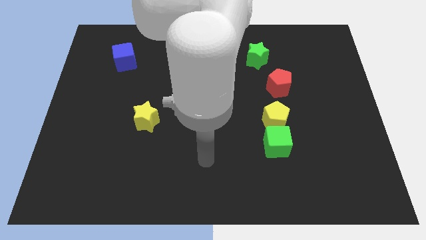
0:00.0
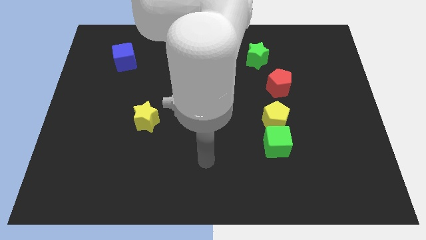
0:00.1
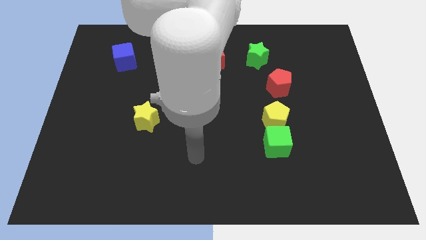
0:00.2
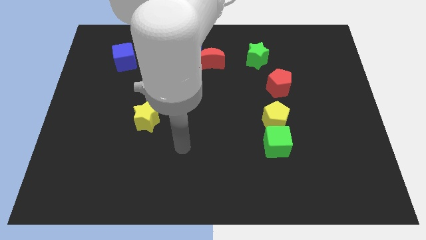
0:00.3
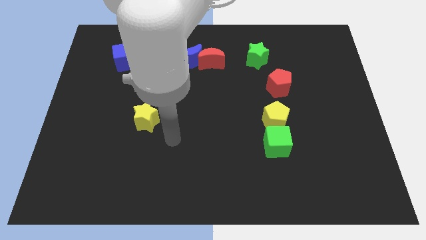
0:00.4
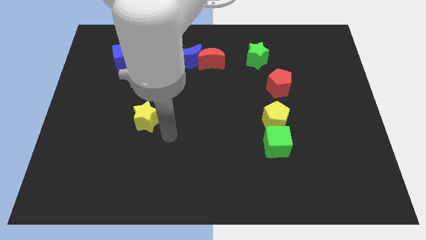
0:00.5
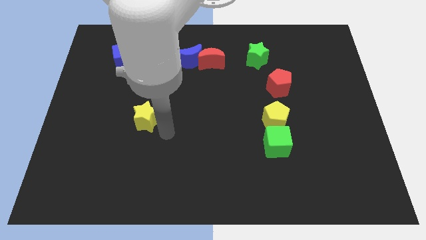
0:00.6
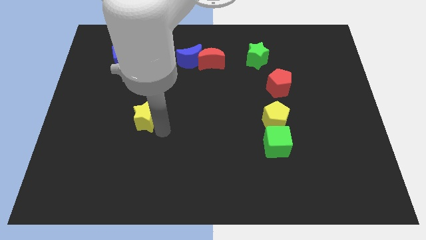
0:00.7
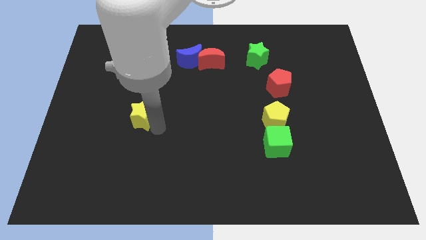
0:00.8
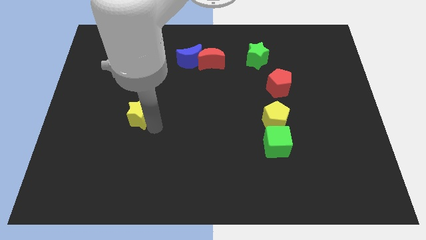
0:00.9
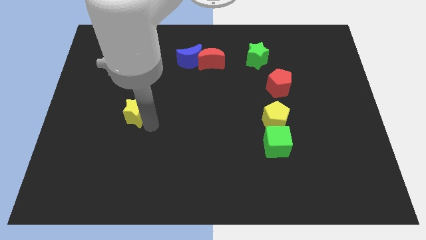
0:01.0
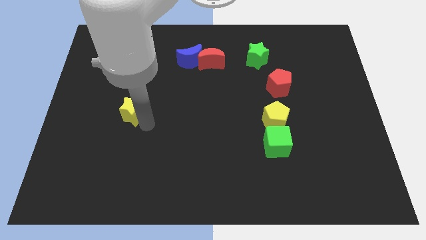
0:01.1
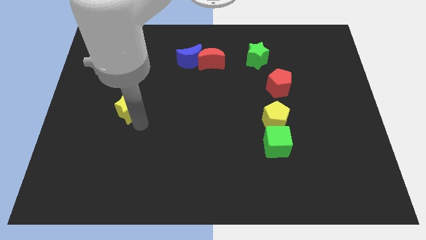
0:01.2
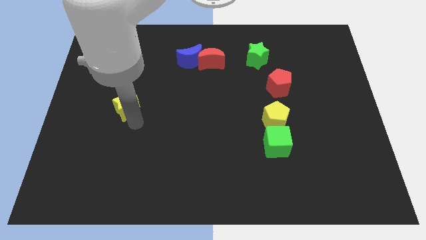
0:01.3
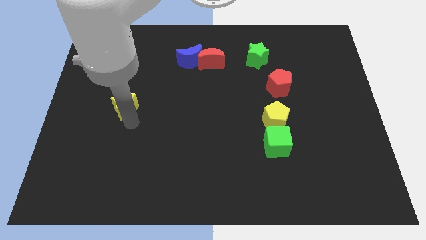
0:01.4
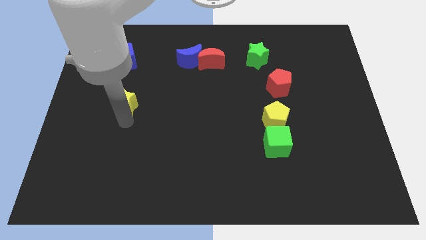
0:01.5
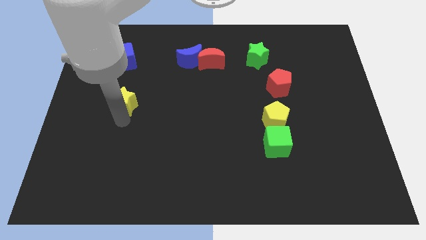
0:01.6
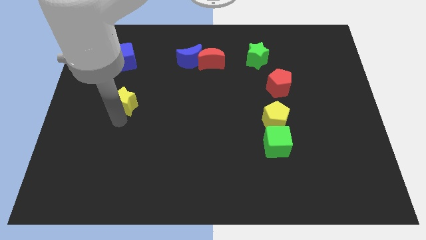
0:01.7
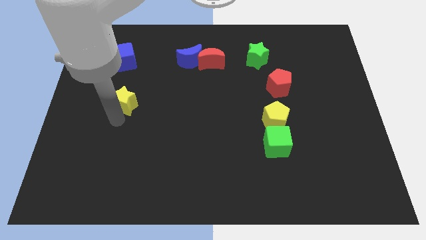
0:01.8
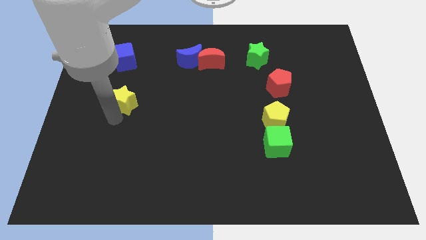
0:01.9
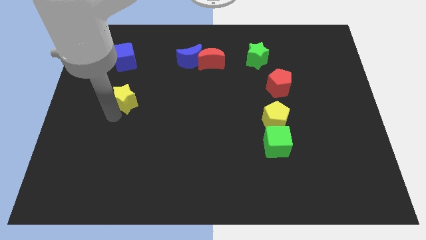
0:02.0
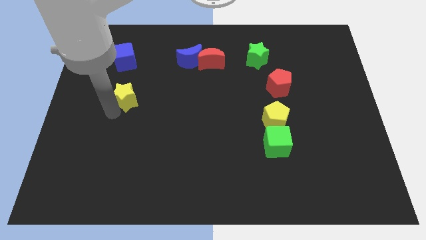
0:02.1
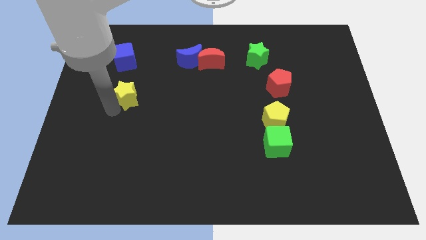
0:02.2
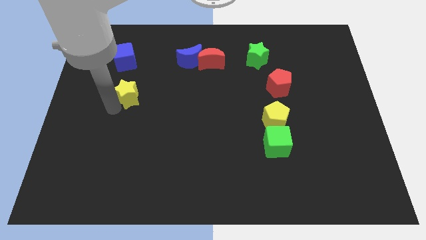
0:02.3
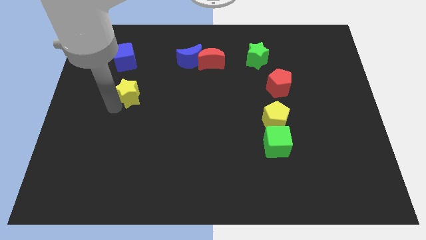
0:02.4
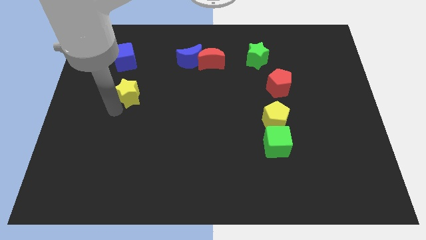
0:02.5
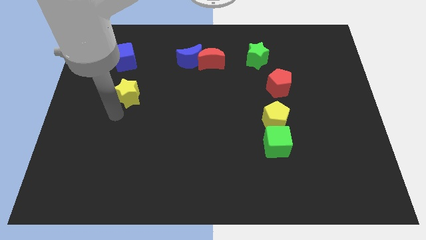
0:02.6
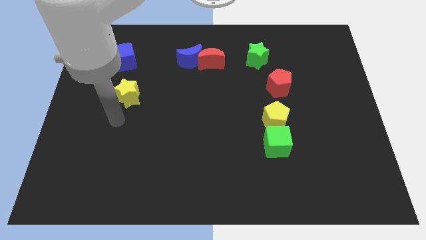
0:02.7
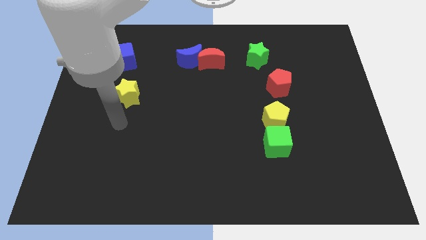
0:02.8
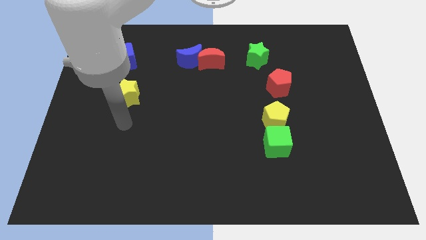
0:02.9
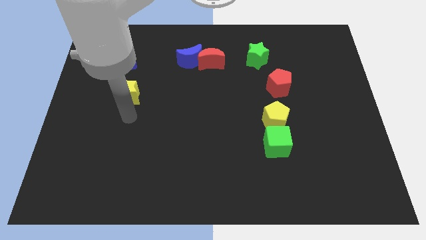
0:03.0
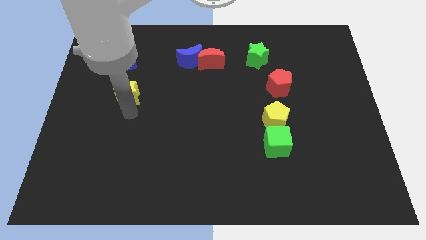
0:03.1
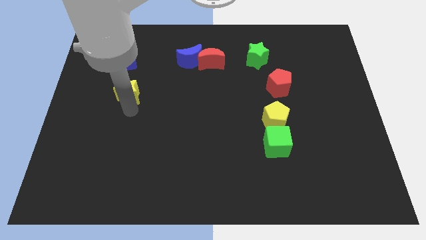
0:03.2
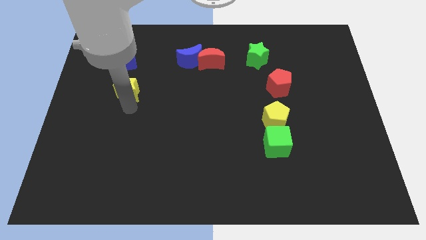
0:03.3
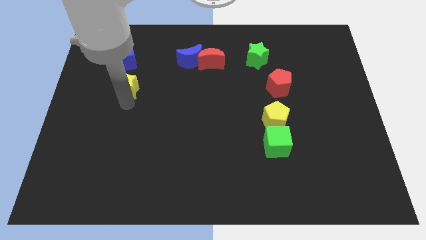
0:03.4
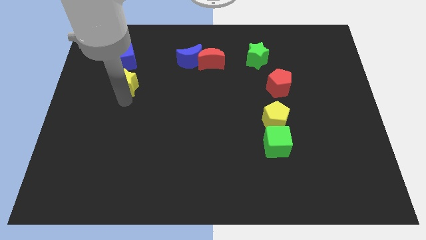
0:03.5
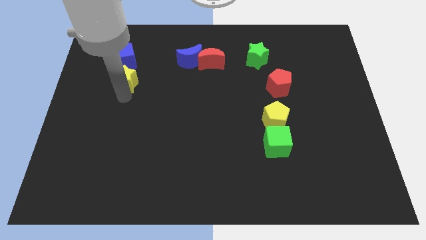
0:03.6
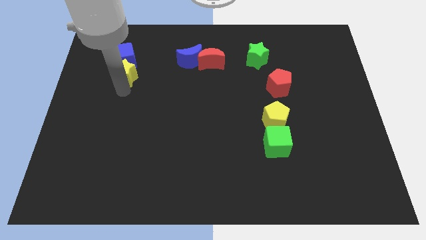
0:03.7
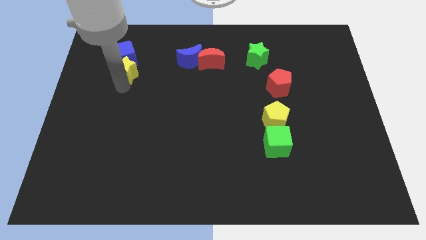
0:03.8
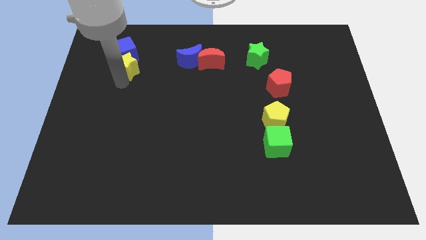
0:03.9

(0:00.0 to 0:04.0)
push the yellow star to the blue cube

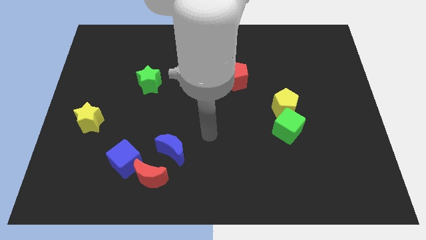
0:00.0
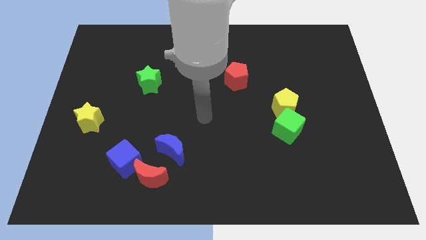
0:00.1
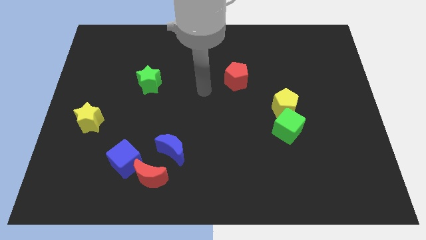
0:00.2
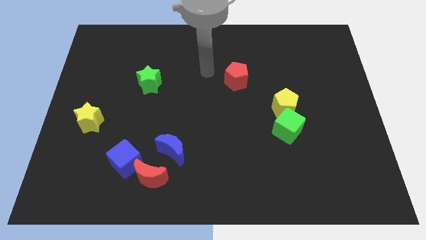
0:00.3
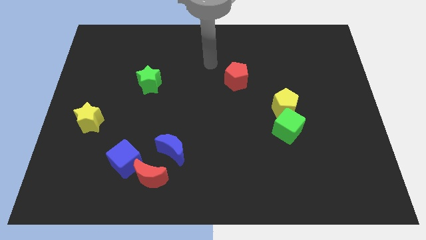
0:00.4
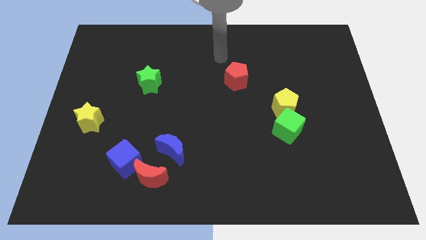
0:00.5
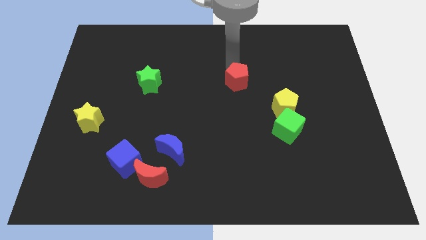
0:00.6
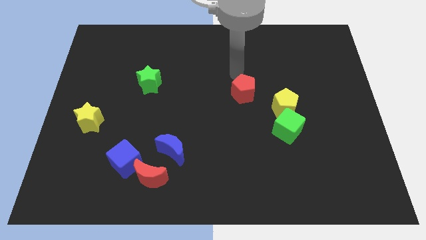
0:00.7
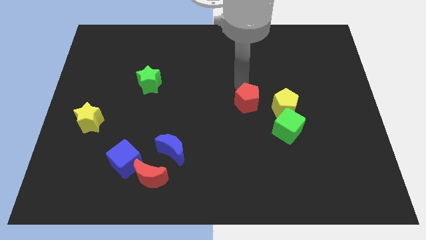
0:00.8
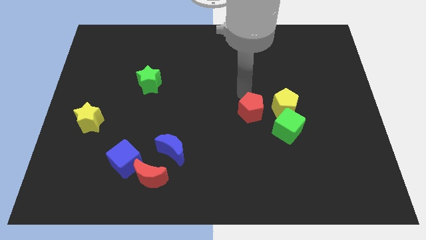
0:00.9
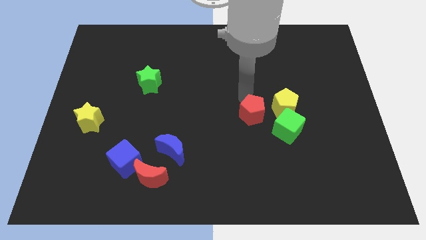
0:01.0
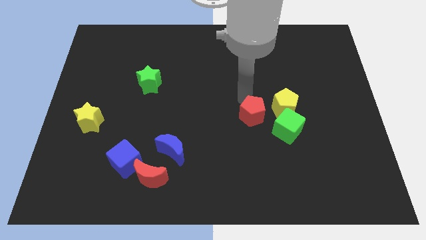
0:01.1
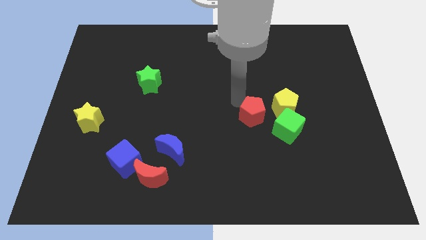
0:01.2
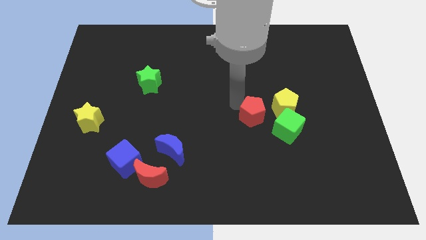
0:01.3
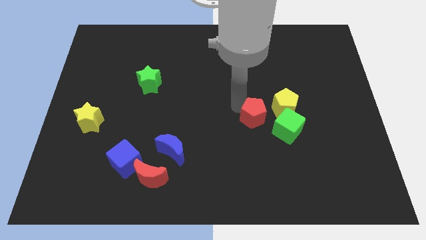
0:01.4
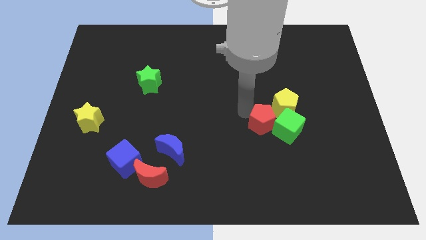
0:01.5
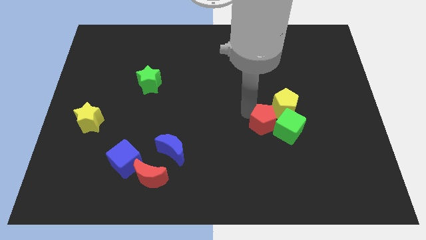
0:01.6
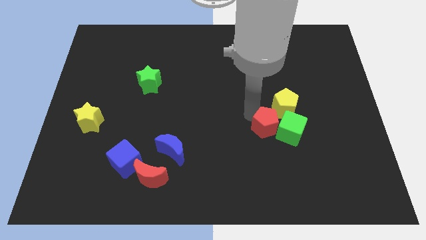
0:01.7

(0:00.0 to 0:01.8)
move the red pentagon next to the green cube

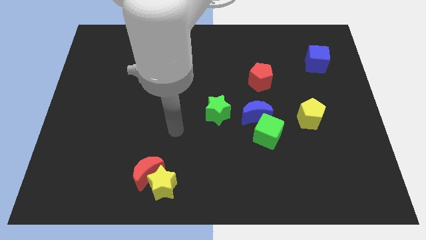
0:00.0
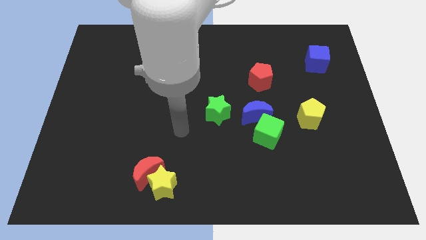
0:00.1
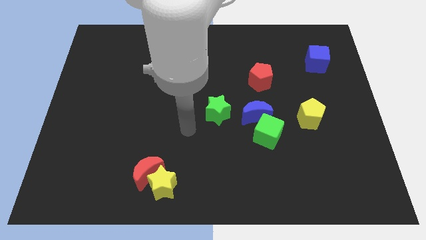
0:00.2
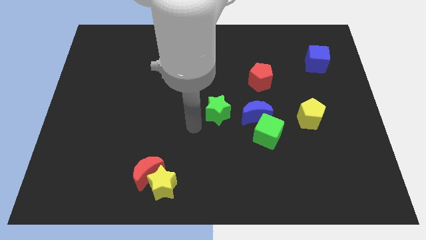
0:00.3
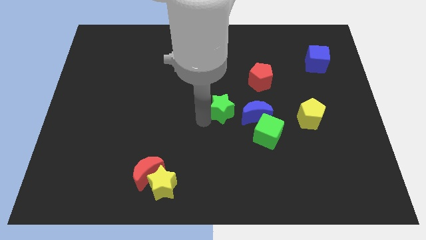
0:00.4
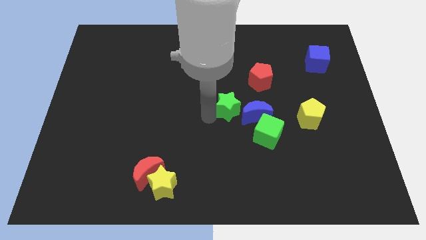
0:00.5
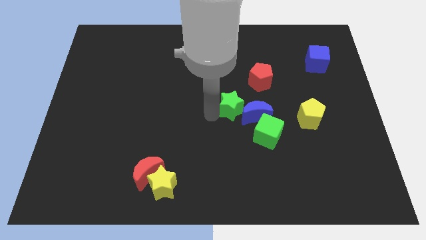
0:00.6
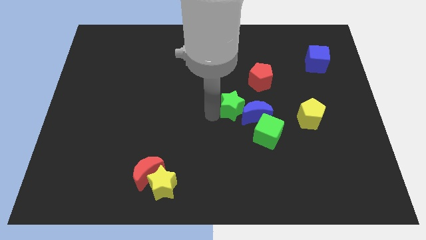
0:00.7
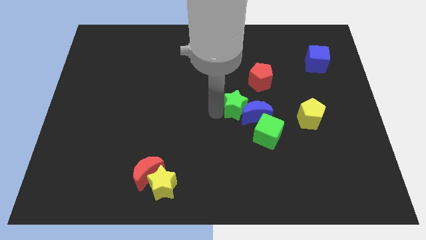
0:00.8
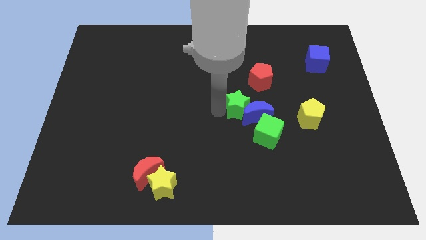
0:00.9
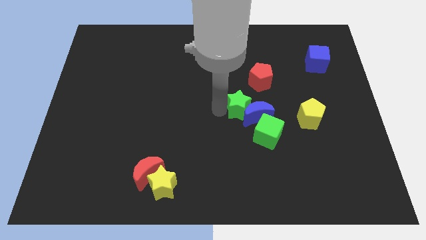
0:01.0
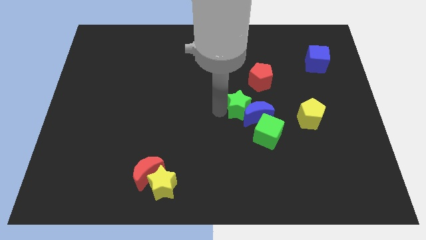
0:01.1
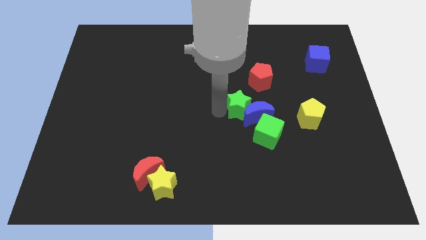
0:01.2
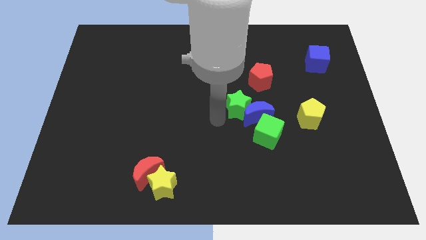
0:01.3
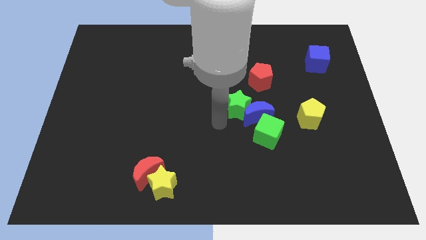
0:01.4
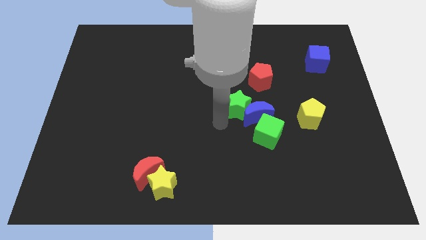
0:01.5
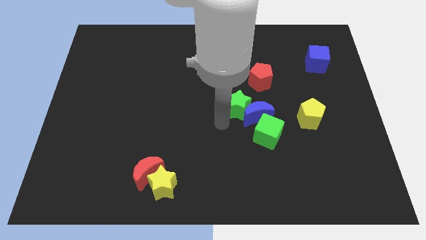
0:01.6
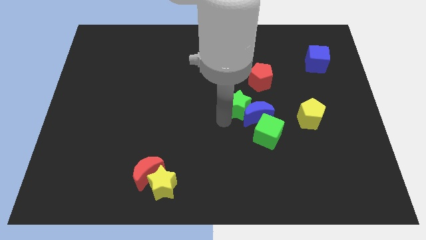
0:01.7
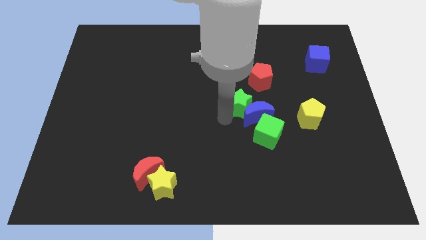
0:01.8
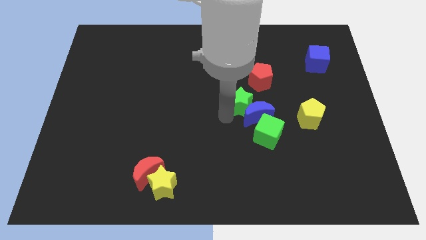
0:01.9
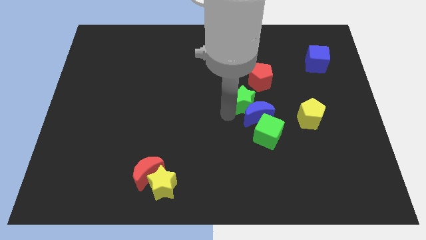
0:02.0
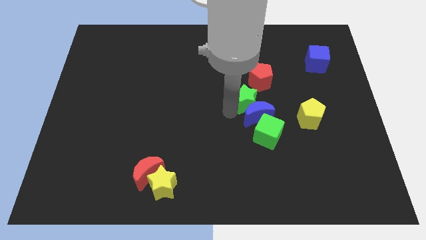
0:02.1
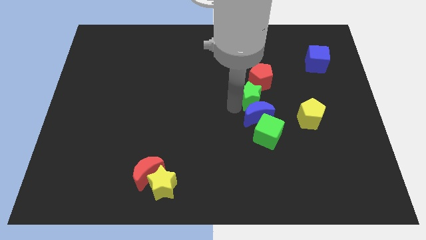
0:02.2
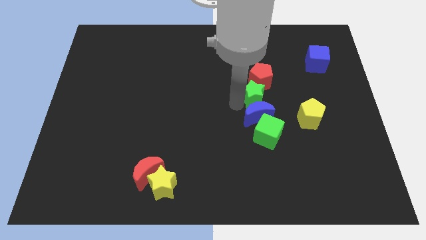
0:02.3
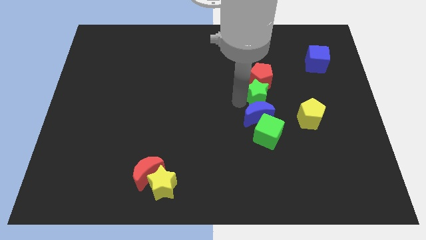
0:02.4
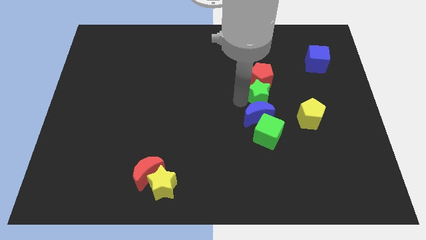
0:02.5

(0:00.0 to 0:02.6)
push the green star next to the red pentagon
